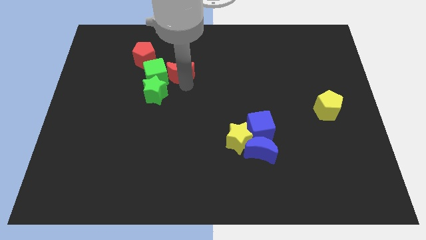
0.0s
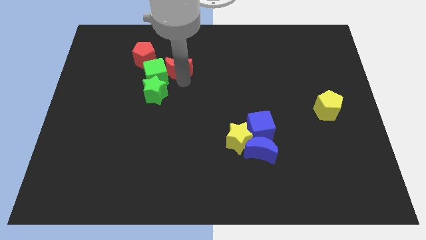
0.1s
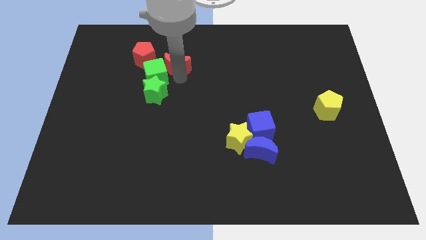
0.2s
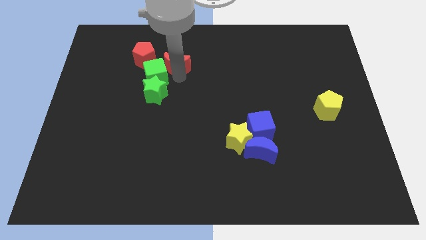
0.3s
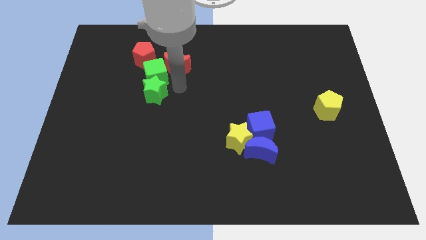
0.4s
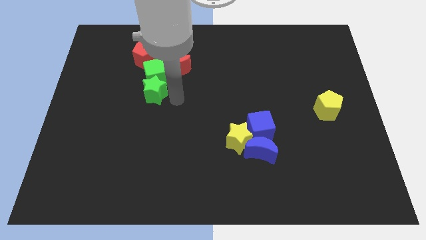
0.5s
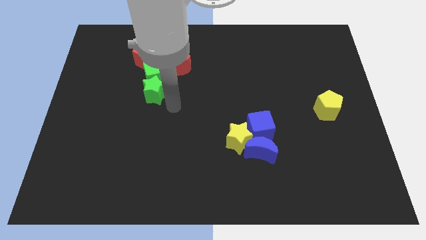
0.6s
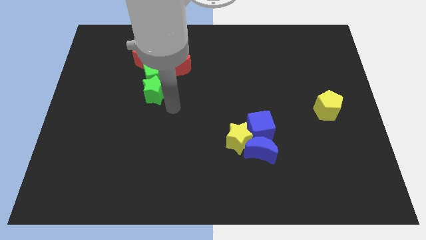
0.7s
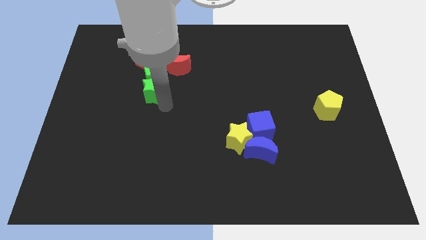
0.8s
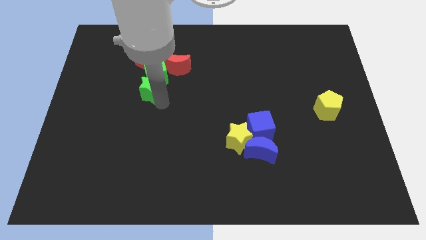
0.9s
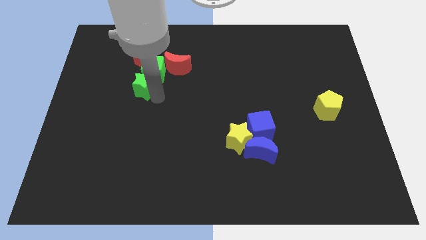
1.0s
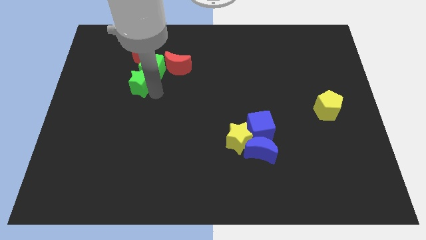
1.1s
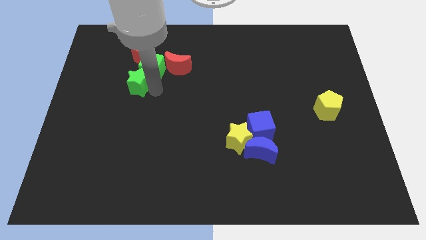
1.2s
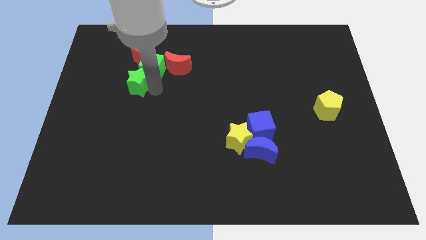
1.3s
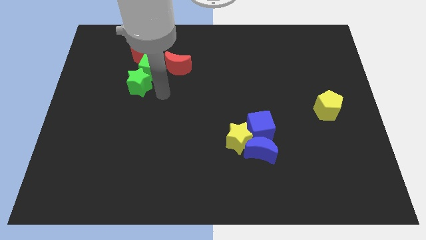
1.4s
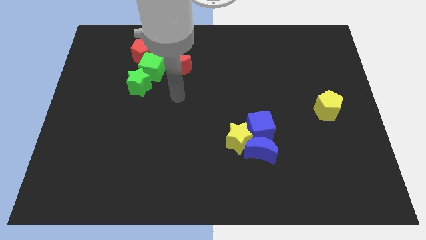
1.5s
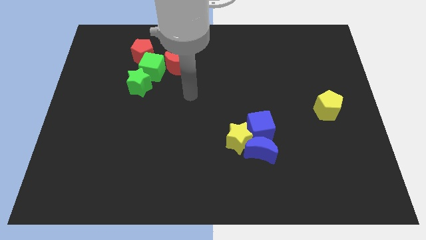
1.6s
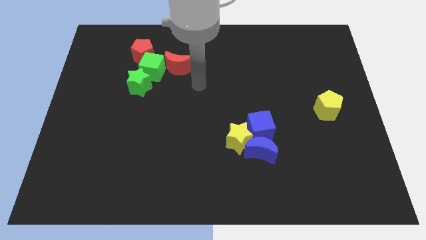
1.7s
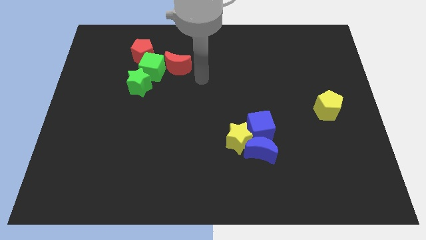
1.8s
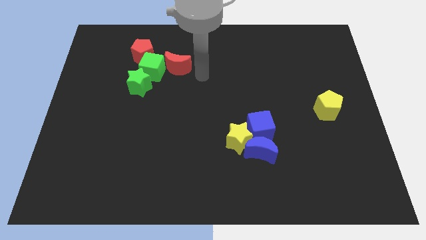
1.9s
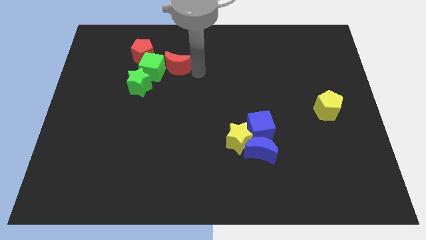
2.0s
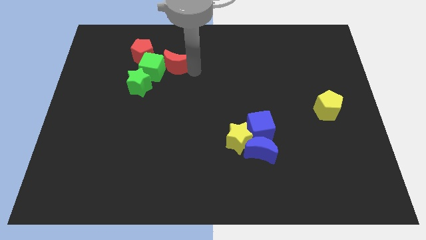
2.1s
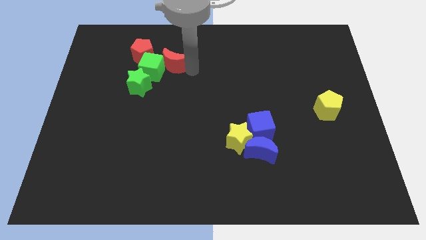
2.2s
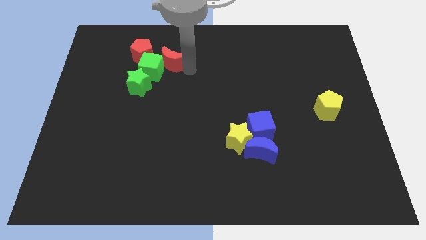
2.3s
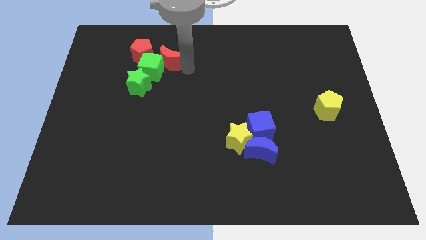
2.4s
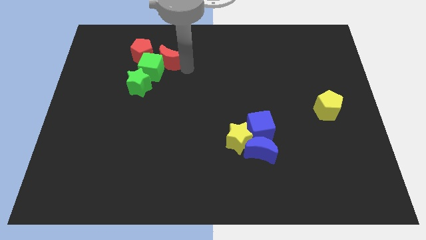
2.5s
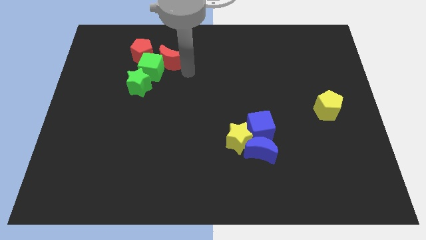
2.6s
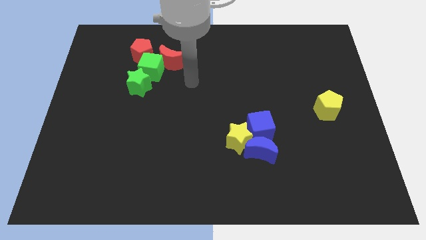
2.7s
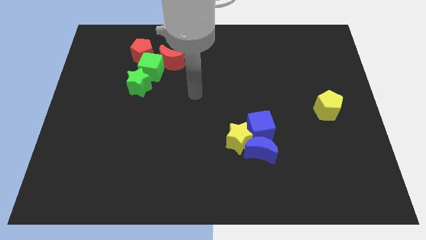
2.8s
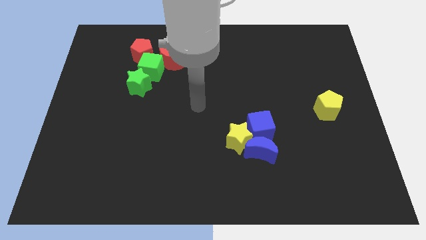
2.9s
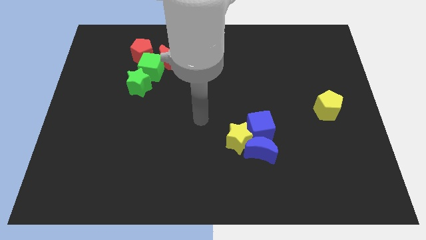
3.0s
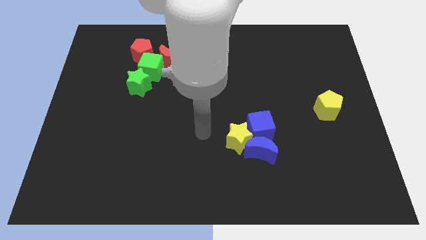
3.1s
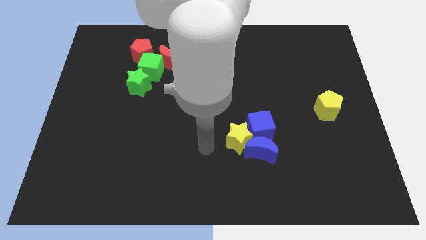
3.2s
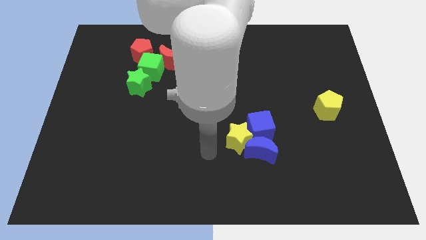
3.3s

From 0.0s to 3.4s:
move the green blocks into the red blocks

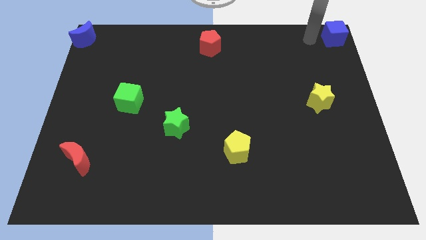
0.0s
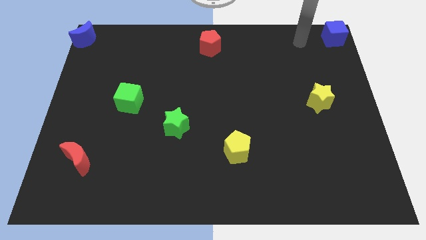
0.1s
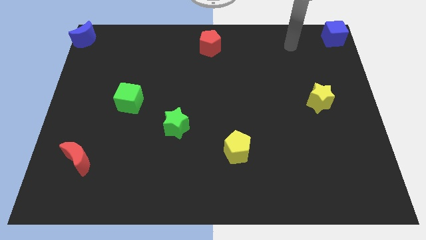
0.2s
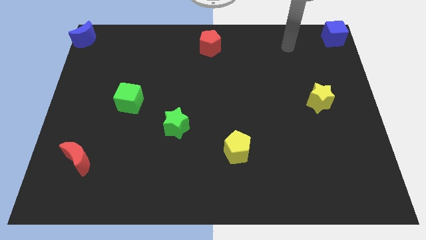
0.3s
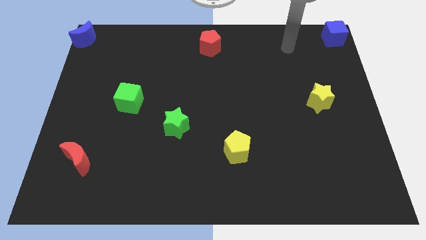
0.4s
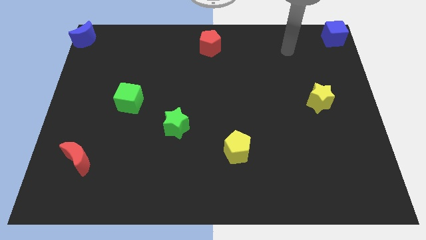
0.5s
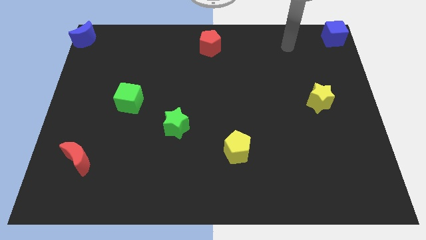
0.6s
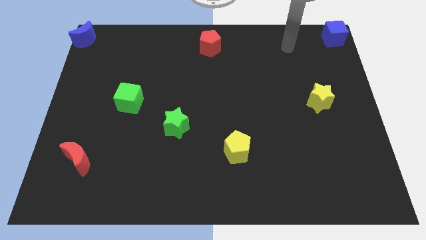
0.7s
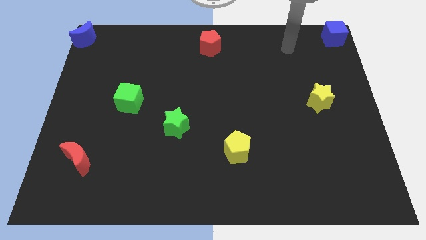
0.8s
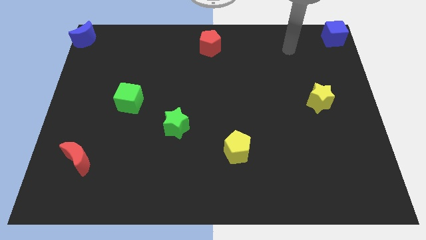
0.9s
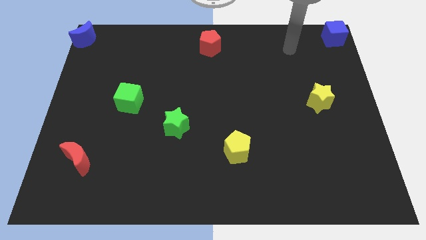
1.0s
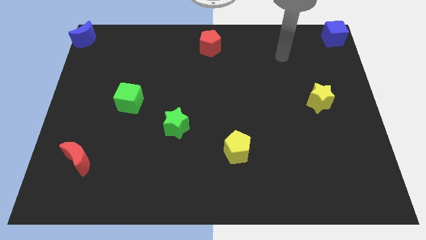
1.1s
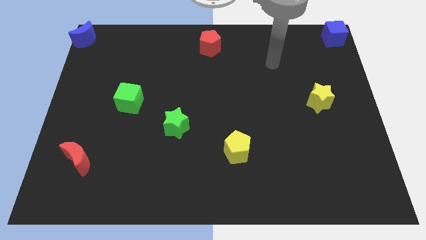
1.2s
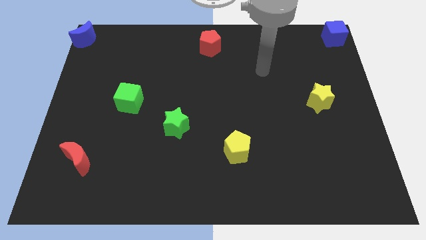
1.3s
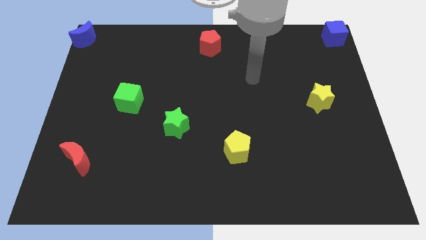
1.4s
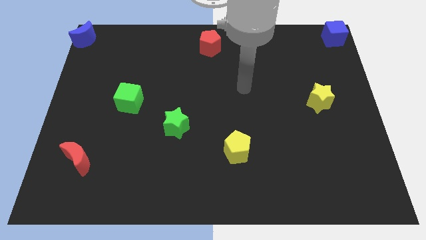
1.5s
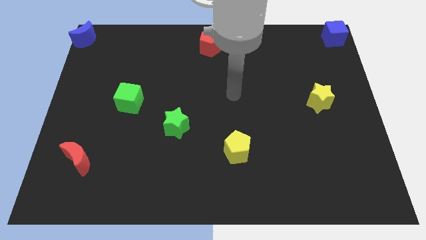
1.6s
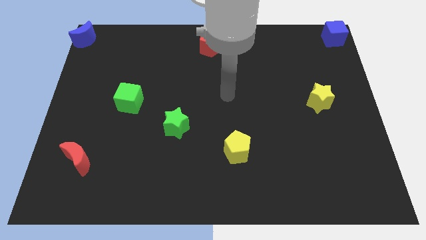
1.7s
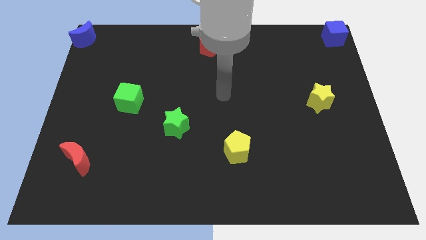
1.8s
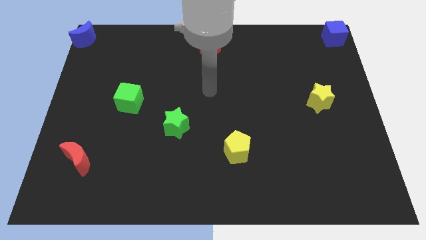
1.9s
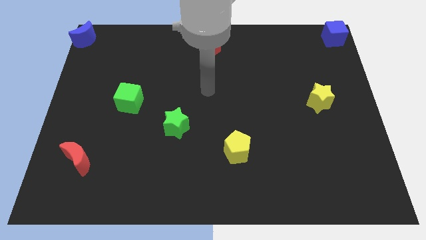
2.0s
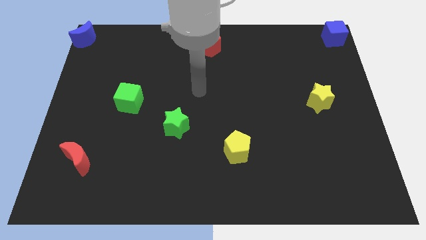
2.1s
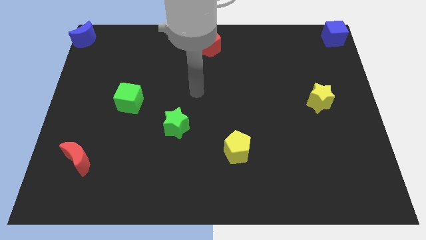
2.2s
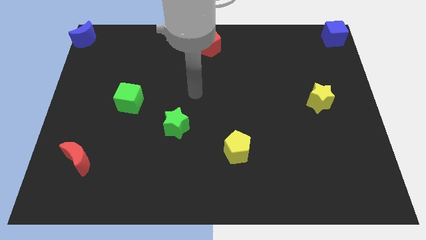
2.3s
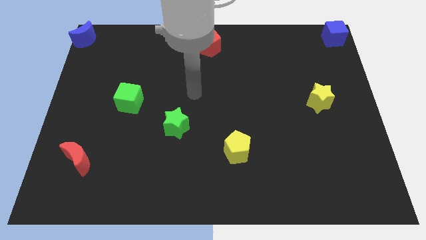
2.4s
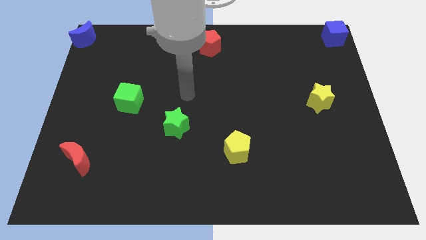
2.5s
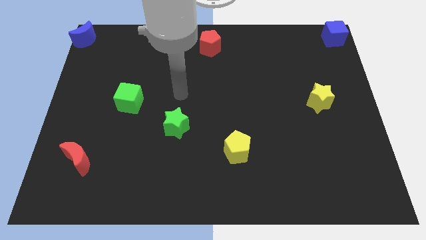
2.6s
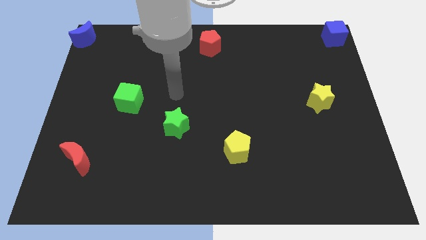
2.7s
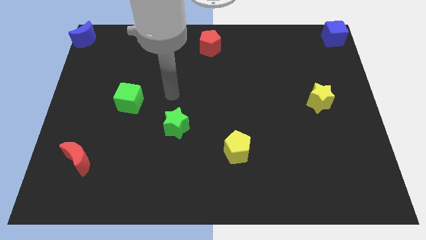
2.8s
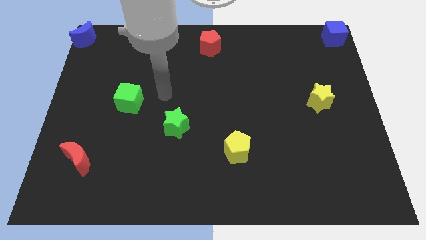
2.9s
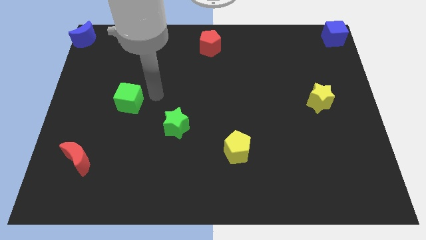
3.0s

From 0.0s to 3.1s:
point the arm to the top right of the green cube

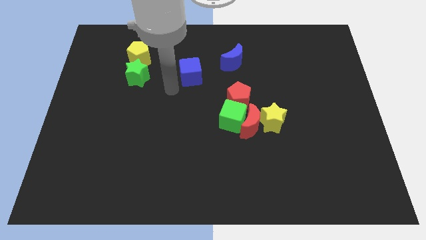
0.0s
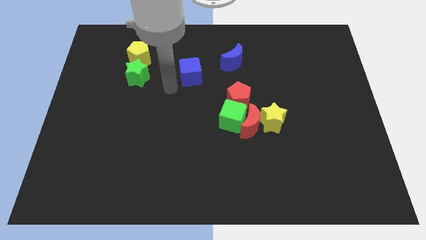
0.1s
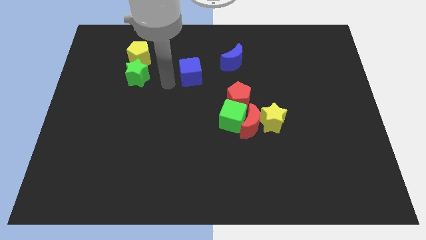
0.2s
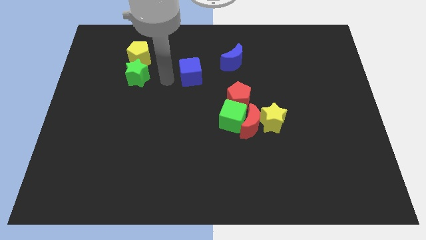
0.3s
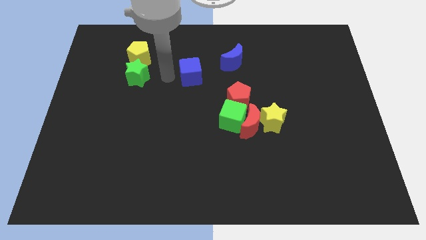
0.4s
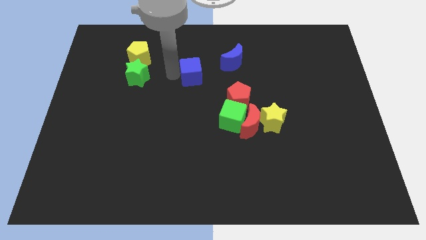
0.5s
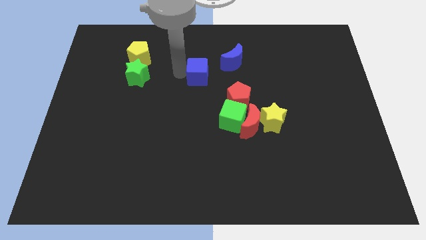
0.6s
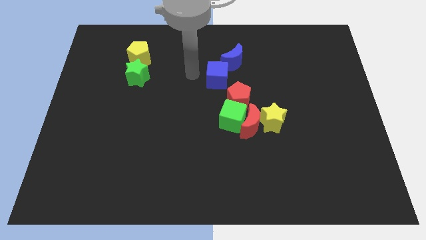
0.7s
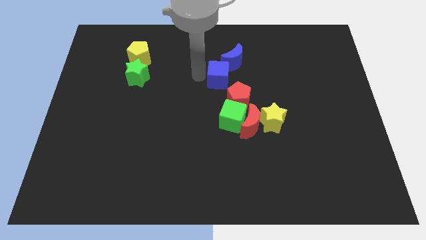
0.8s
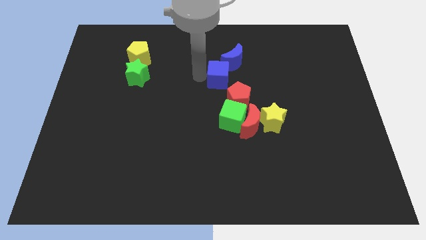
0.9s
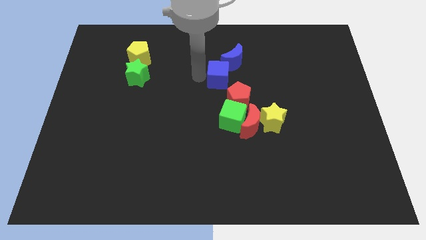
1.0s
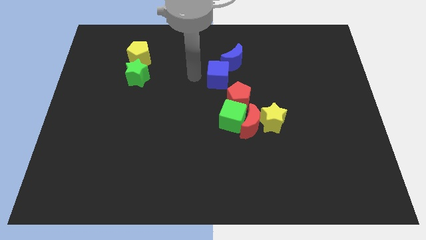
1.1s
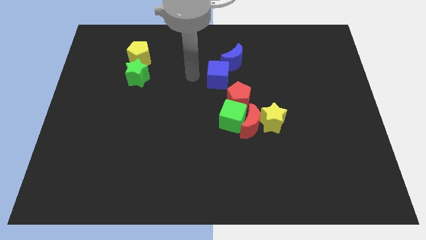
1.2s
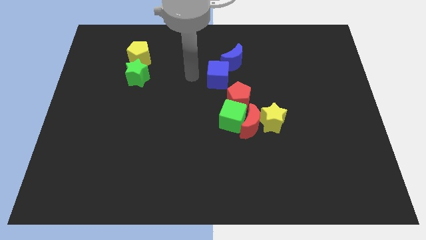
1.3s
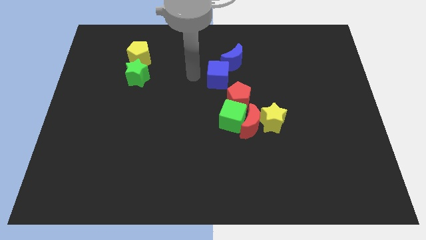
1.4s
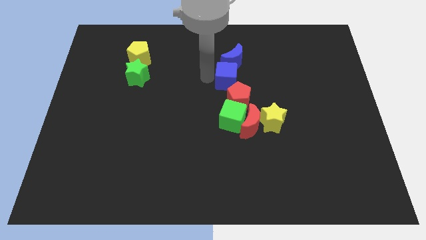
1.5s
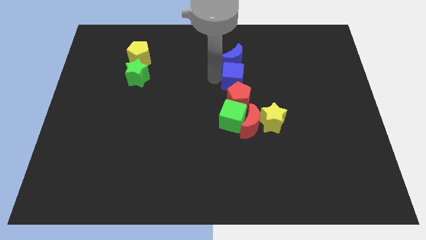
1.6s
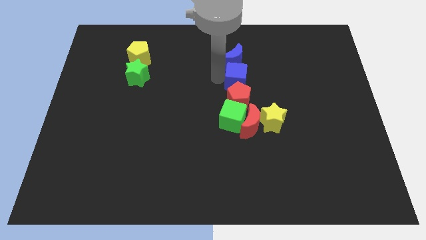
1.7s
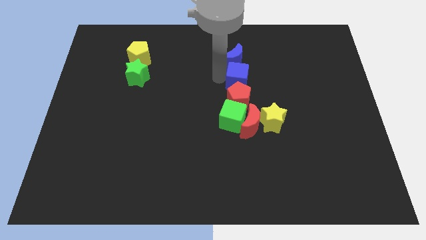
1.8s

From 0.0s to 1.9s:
place the blue cube in between the blue moon and the red pentagon

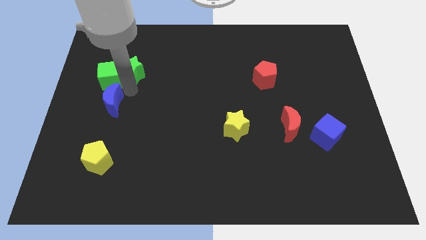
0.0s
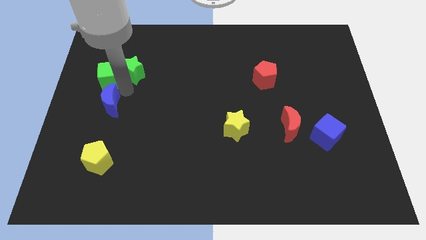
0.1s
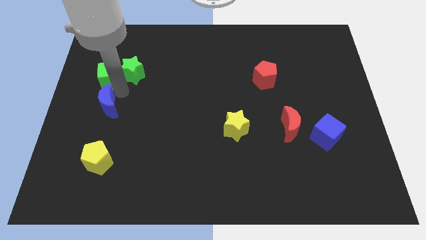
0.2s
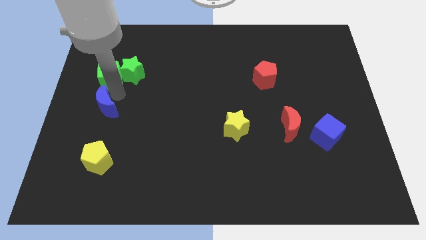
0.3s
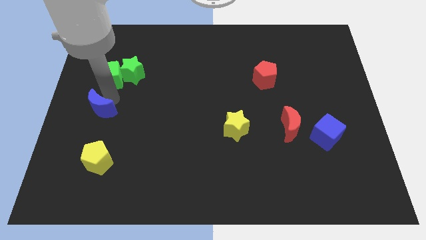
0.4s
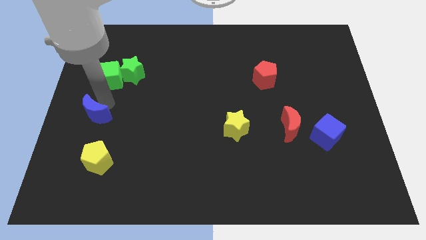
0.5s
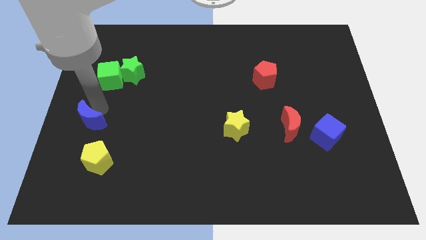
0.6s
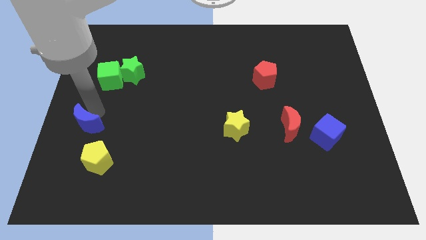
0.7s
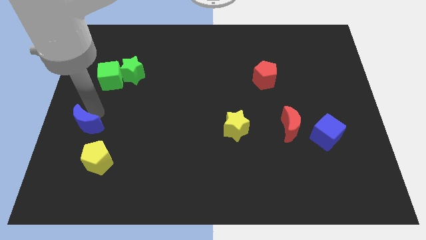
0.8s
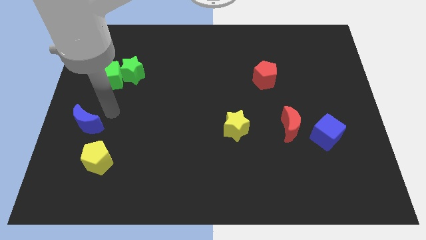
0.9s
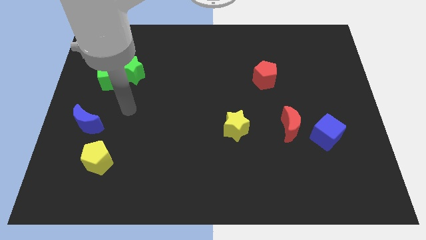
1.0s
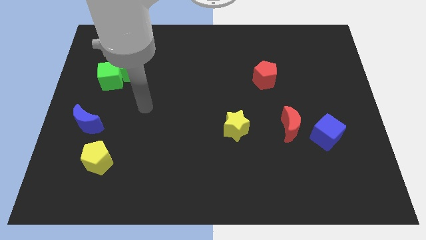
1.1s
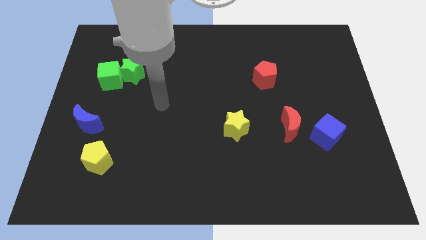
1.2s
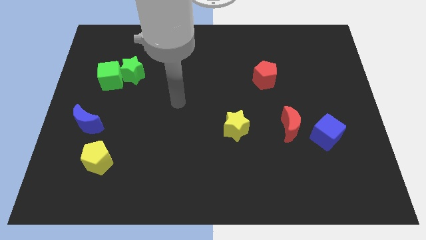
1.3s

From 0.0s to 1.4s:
separate the blue crescent from the green blocks
